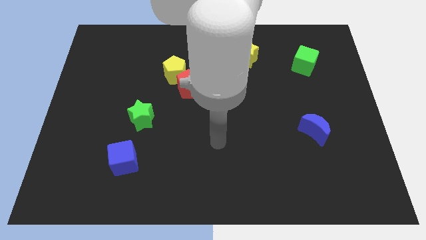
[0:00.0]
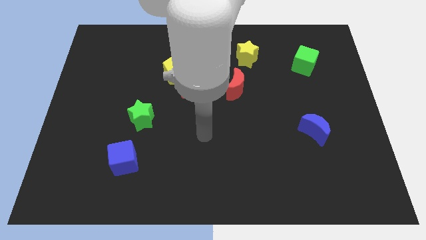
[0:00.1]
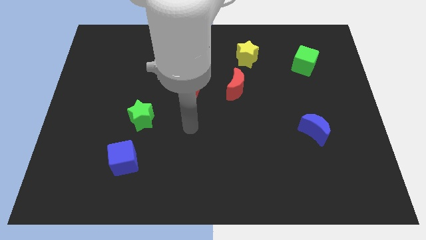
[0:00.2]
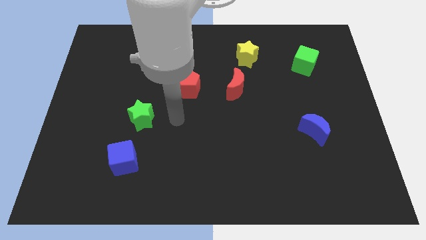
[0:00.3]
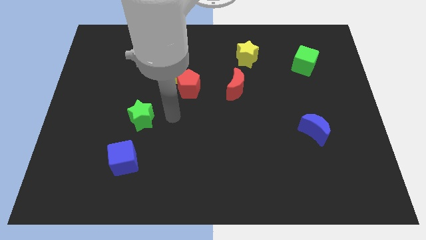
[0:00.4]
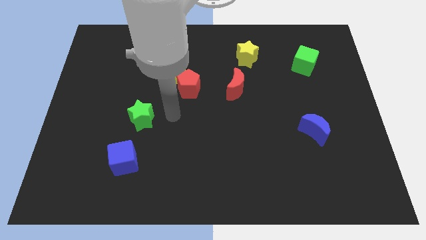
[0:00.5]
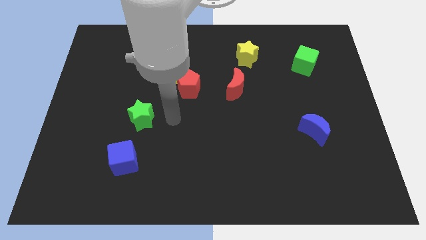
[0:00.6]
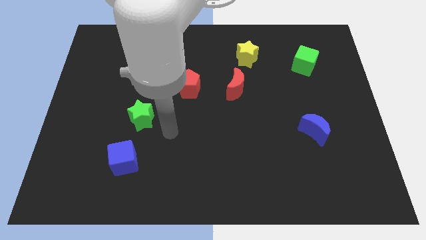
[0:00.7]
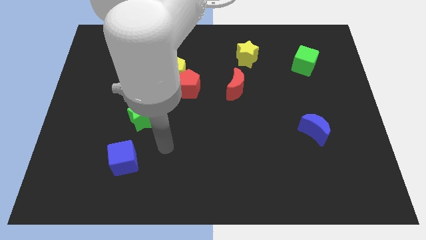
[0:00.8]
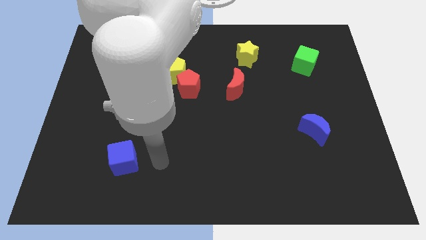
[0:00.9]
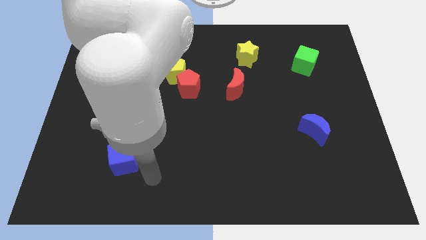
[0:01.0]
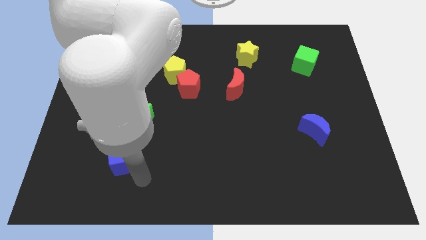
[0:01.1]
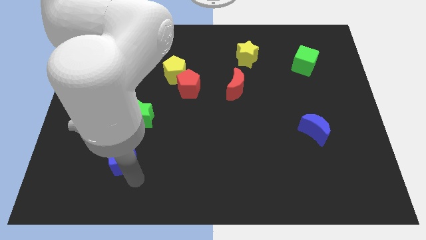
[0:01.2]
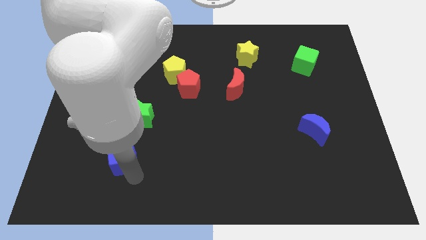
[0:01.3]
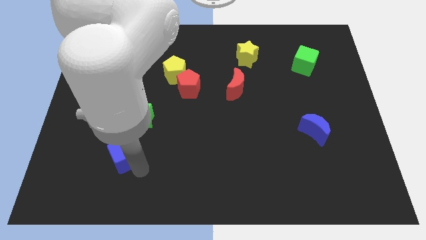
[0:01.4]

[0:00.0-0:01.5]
touch at the bottom right side of the blue cube

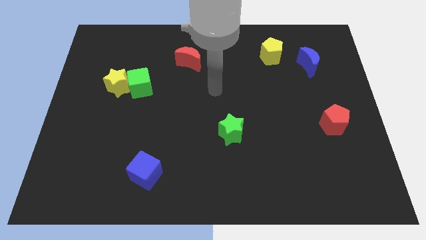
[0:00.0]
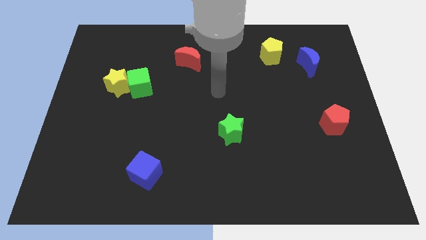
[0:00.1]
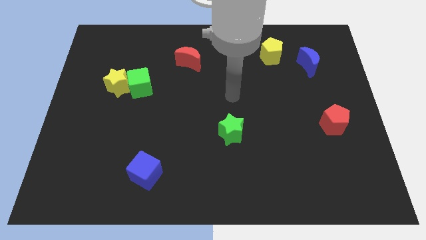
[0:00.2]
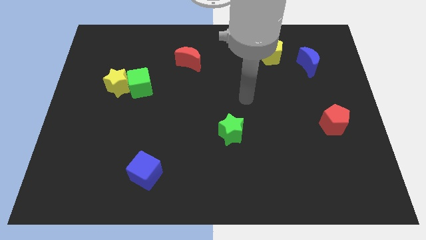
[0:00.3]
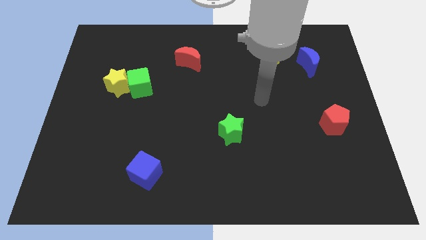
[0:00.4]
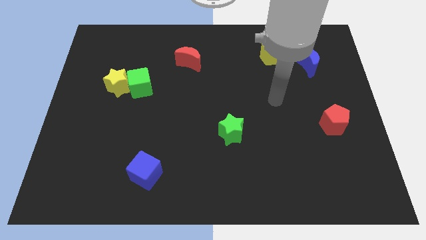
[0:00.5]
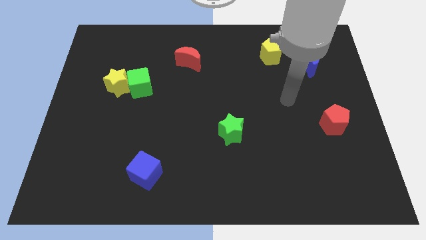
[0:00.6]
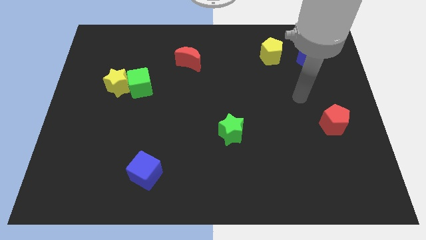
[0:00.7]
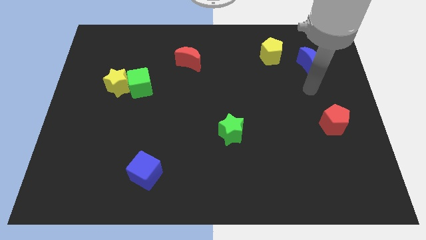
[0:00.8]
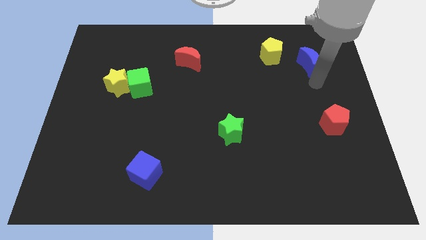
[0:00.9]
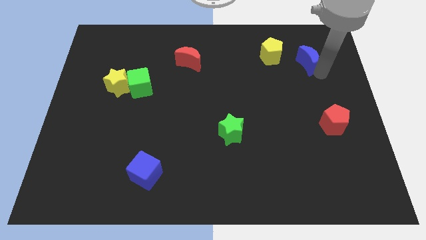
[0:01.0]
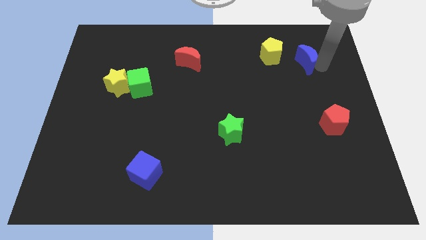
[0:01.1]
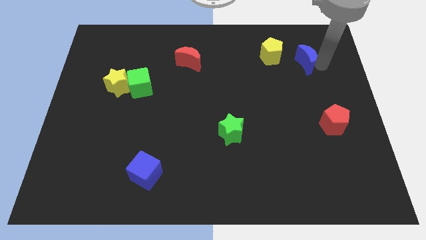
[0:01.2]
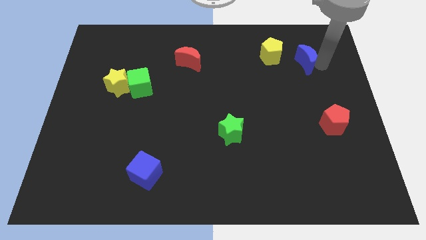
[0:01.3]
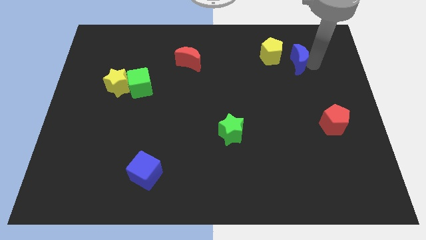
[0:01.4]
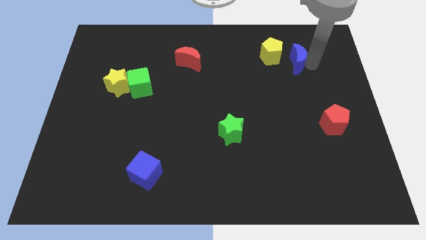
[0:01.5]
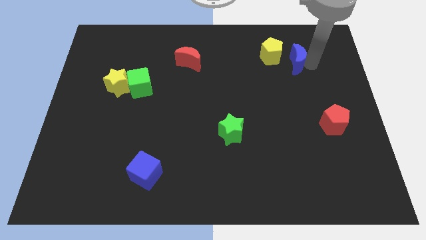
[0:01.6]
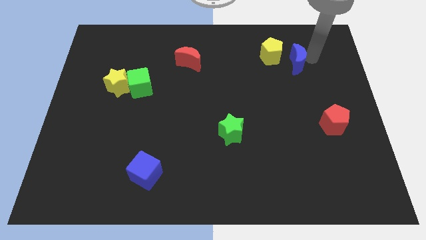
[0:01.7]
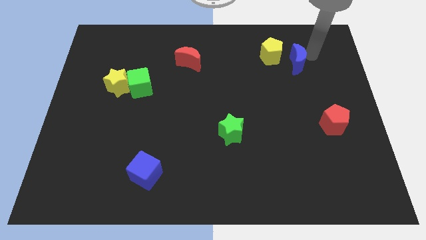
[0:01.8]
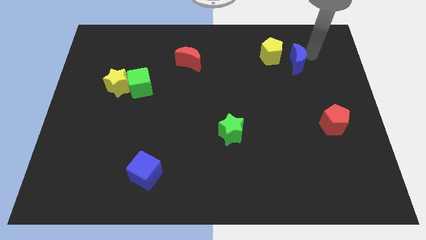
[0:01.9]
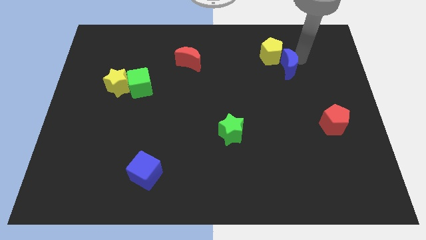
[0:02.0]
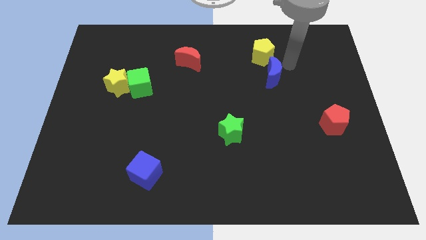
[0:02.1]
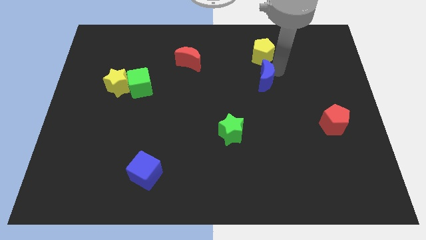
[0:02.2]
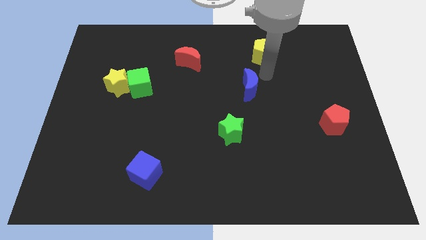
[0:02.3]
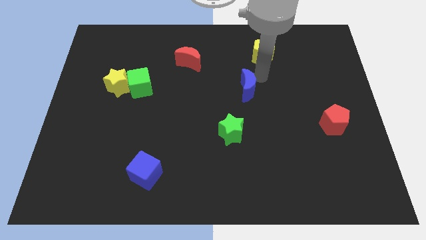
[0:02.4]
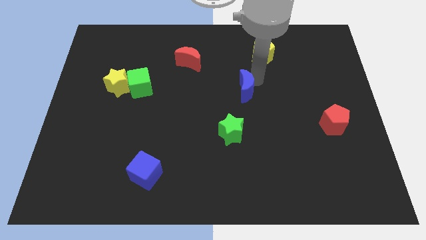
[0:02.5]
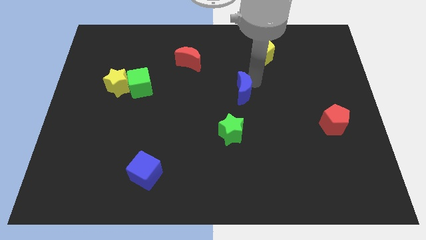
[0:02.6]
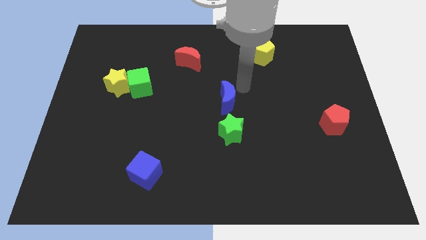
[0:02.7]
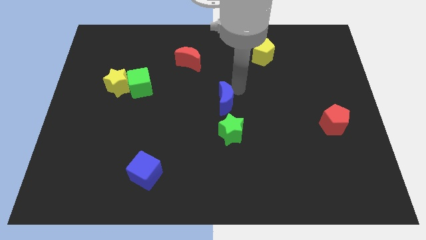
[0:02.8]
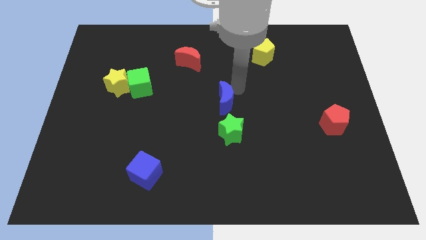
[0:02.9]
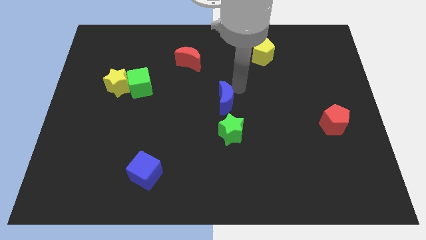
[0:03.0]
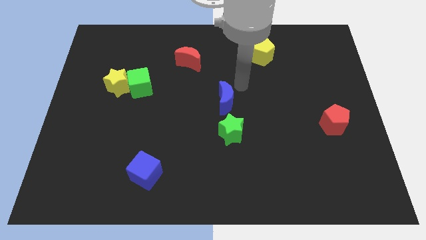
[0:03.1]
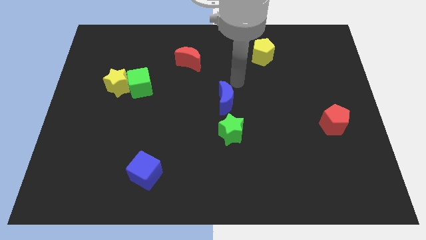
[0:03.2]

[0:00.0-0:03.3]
place blue moon to the top of green star

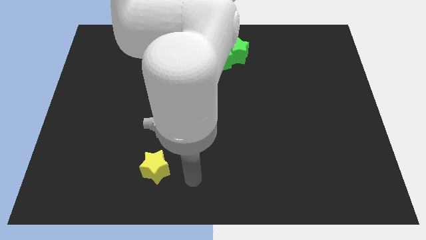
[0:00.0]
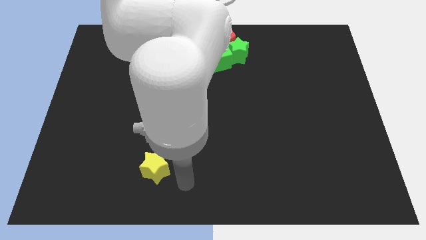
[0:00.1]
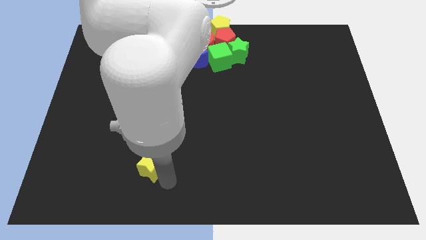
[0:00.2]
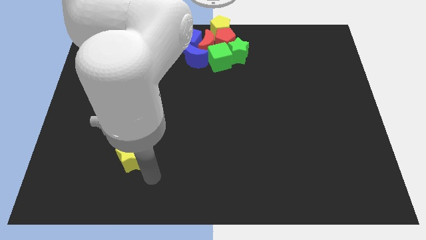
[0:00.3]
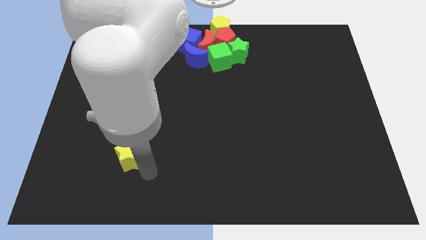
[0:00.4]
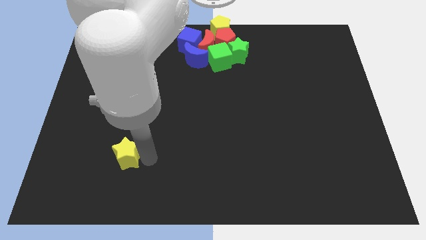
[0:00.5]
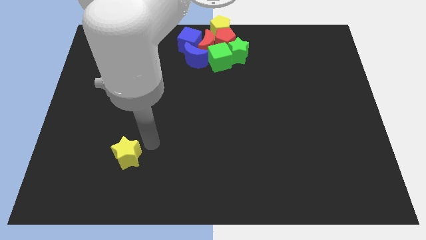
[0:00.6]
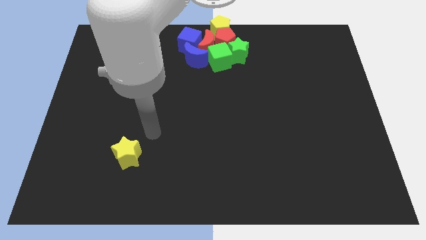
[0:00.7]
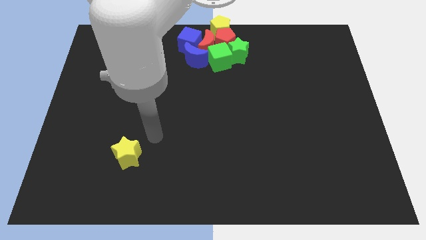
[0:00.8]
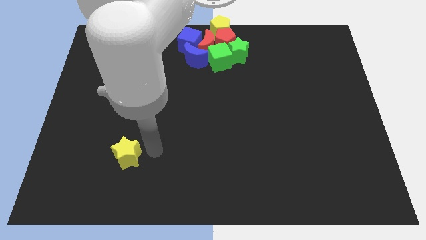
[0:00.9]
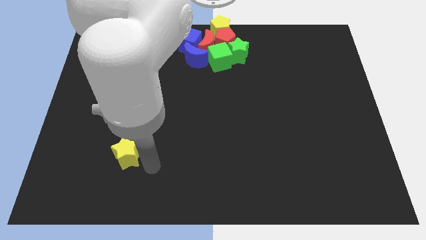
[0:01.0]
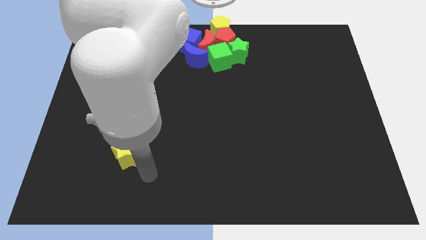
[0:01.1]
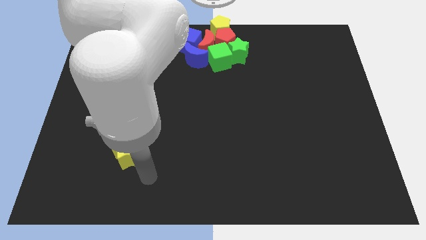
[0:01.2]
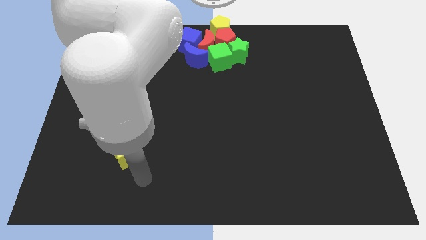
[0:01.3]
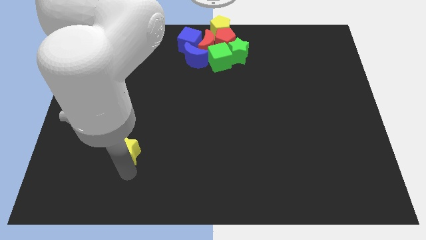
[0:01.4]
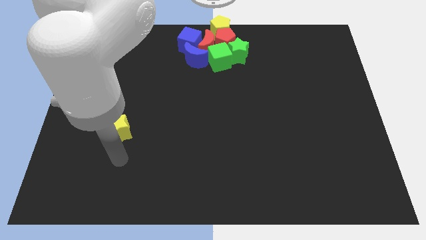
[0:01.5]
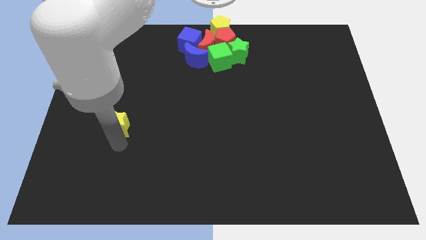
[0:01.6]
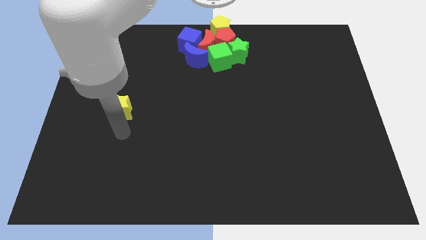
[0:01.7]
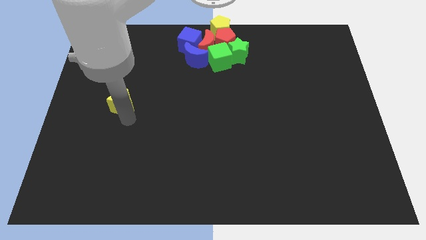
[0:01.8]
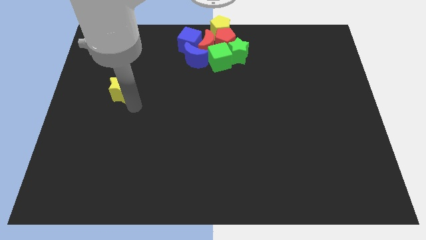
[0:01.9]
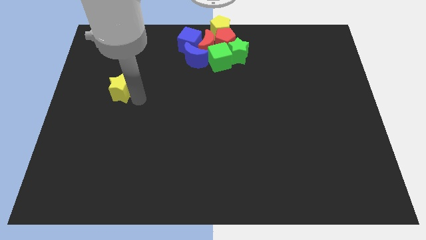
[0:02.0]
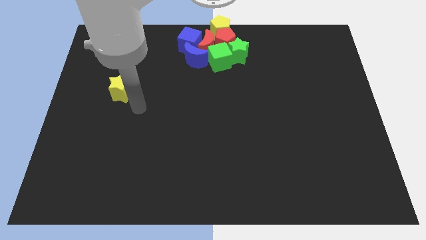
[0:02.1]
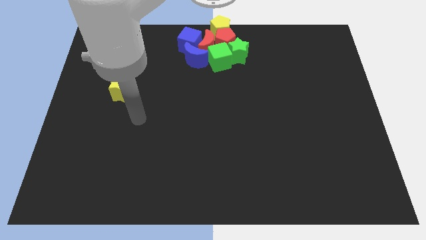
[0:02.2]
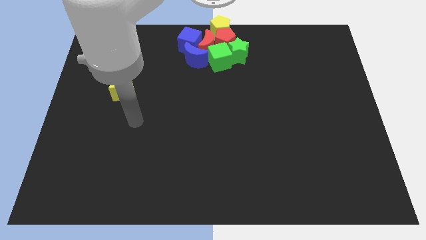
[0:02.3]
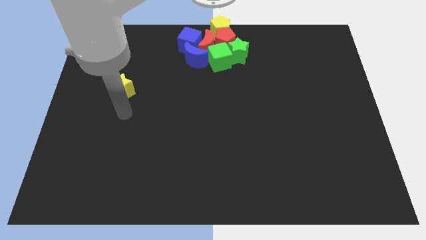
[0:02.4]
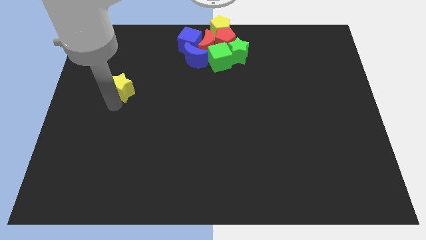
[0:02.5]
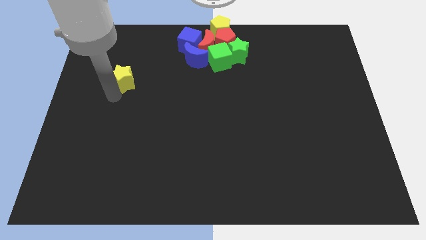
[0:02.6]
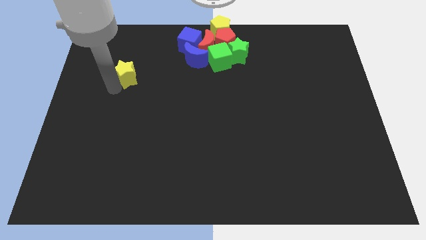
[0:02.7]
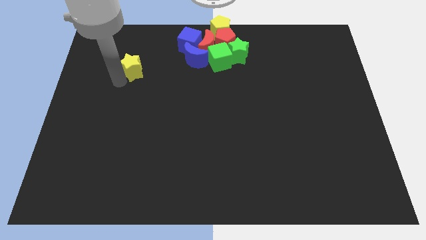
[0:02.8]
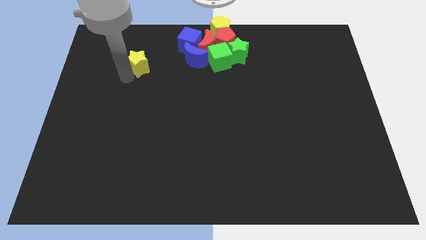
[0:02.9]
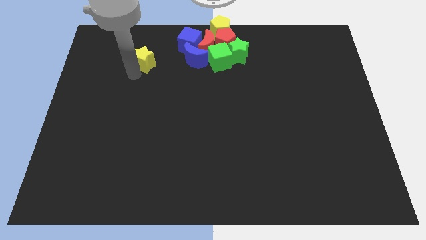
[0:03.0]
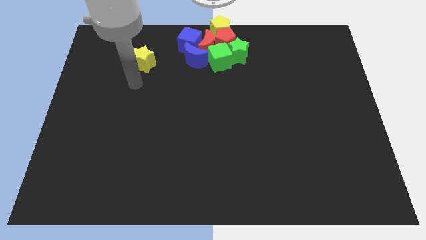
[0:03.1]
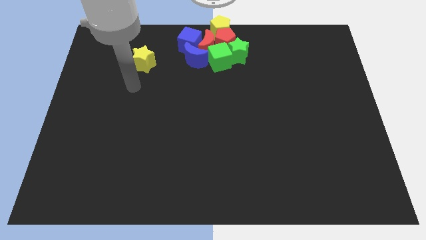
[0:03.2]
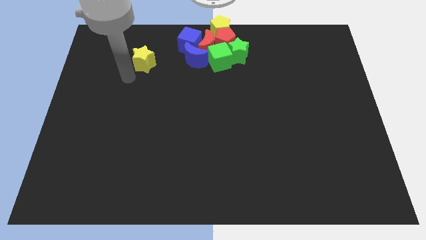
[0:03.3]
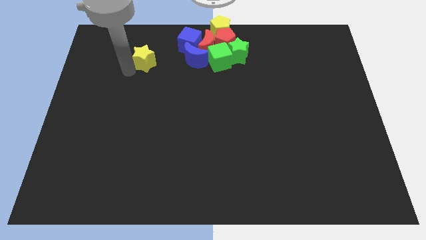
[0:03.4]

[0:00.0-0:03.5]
move the yellow star to the left of the blue moon

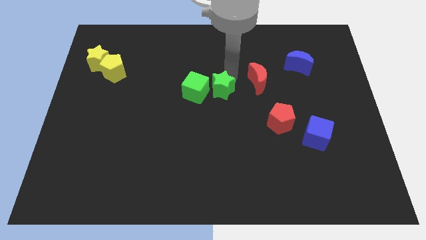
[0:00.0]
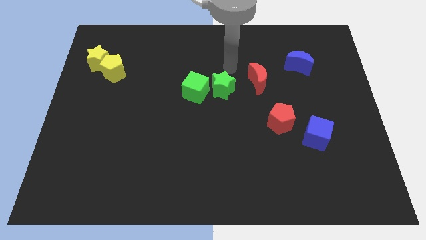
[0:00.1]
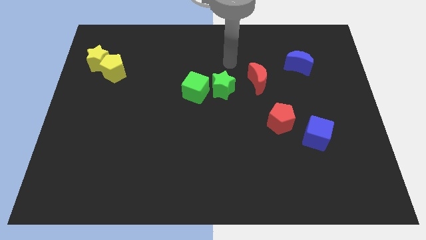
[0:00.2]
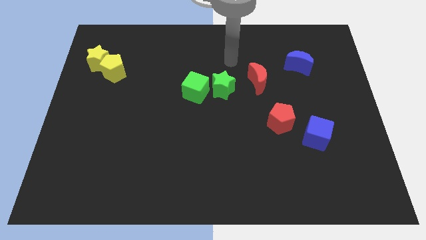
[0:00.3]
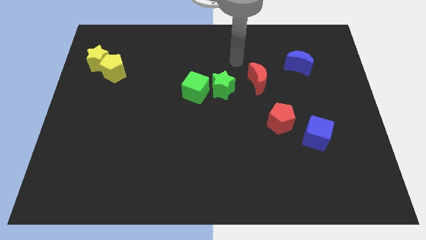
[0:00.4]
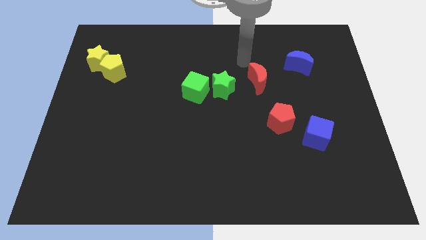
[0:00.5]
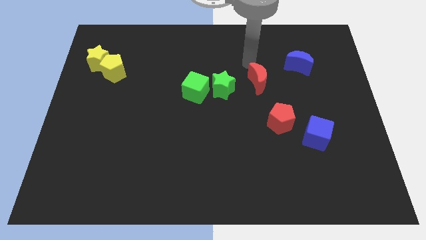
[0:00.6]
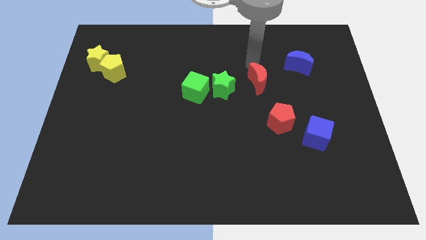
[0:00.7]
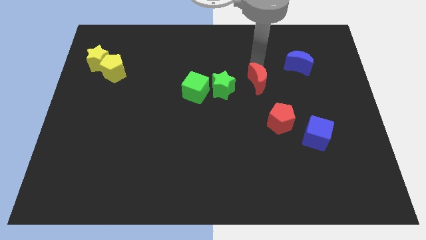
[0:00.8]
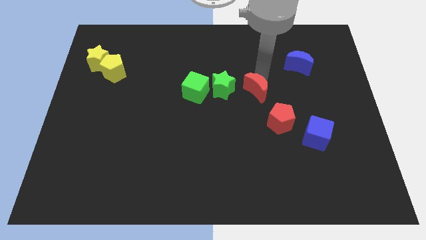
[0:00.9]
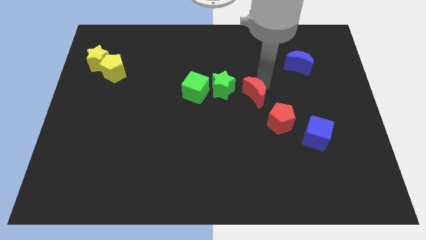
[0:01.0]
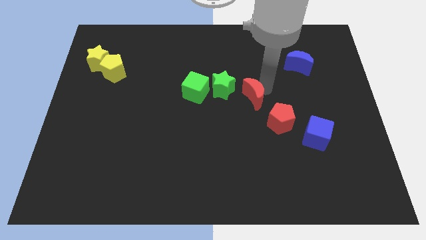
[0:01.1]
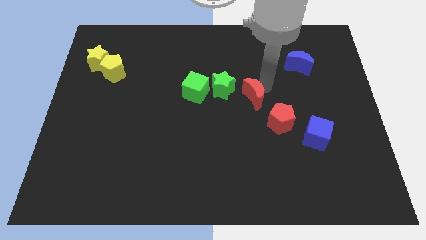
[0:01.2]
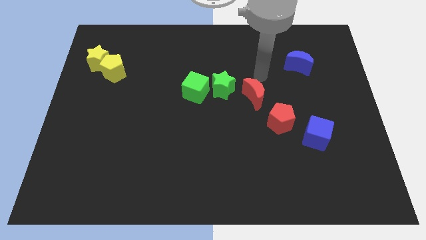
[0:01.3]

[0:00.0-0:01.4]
place the red moon in between the green star and red pentagon
